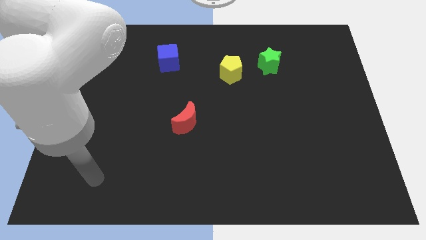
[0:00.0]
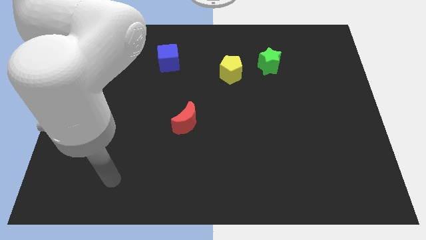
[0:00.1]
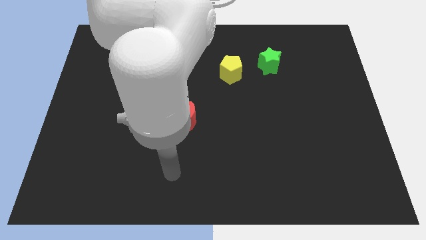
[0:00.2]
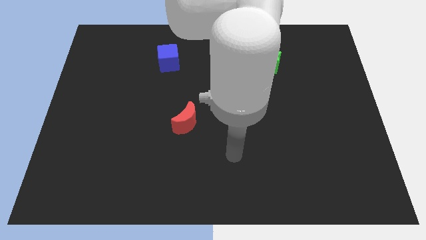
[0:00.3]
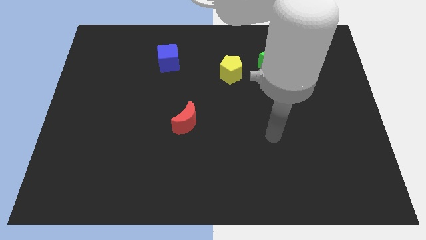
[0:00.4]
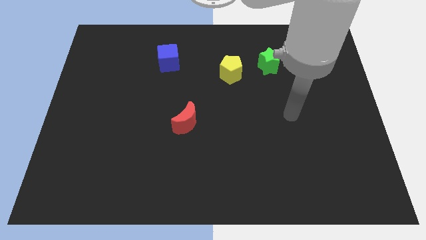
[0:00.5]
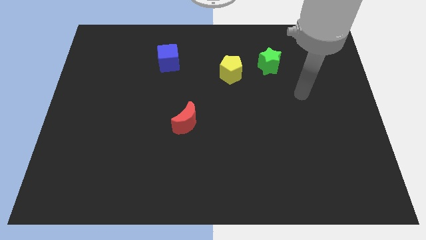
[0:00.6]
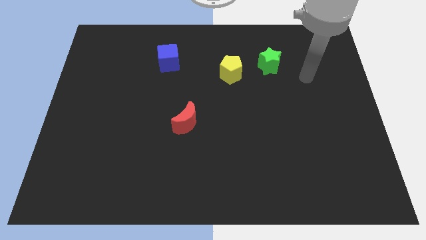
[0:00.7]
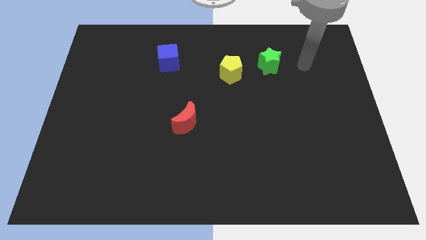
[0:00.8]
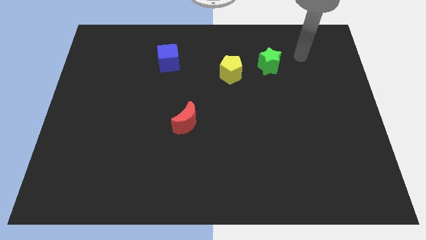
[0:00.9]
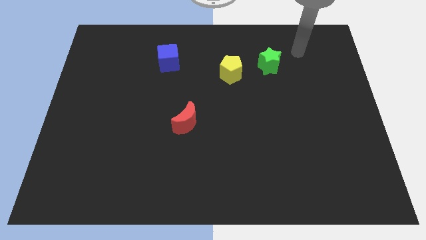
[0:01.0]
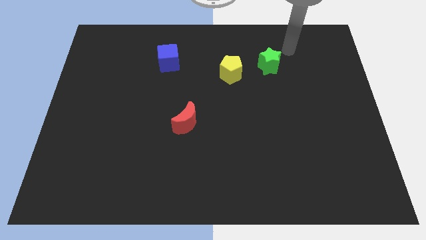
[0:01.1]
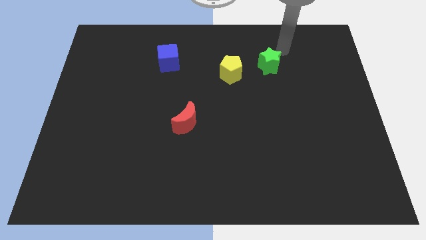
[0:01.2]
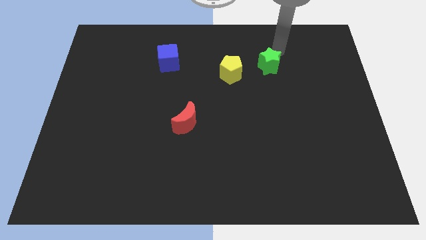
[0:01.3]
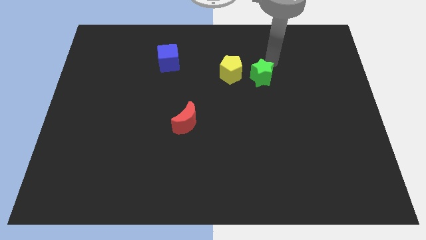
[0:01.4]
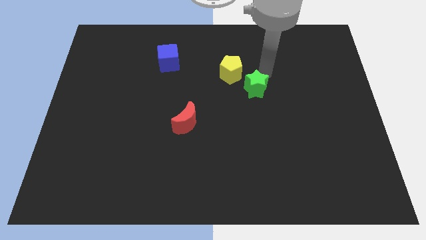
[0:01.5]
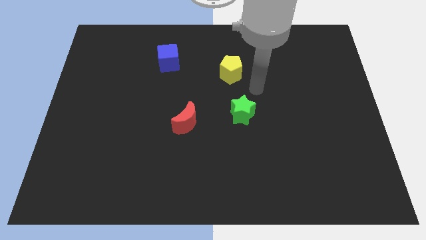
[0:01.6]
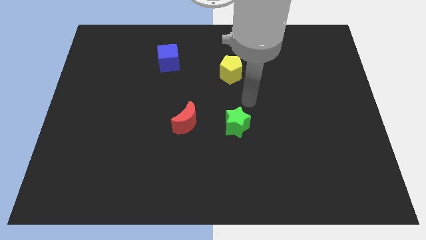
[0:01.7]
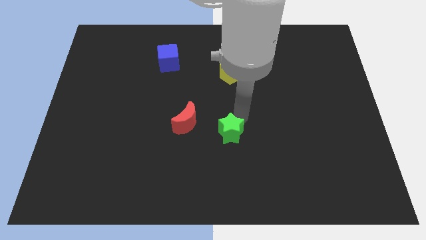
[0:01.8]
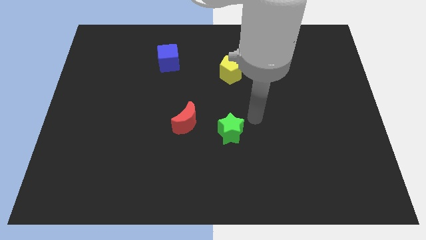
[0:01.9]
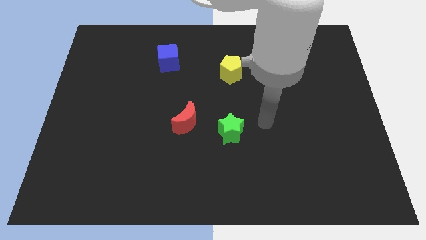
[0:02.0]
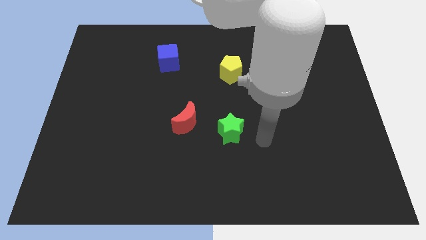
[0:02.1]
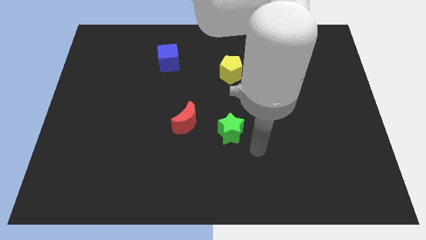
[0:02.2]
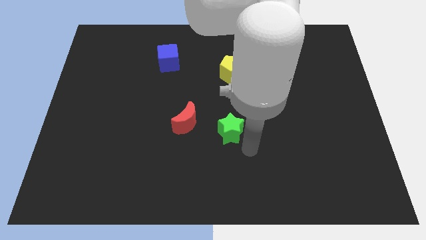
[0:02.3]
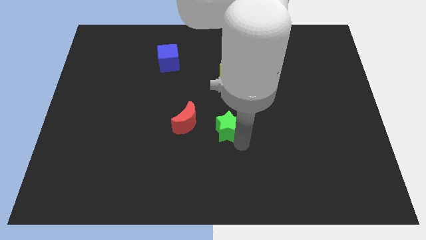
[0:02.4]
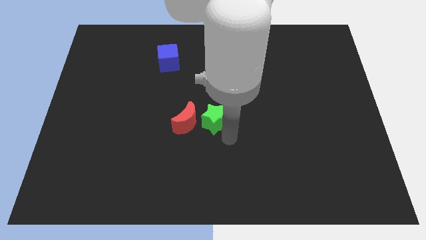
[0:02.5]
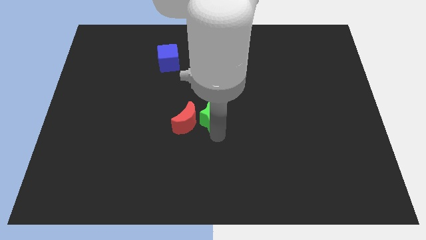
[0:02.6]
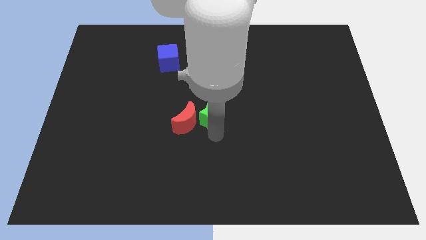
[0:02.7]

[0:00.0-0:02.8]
put the star towards the moon

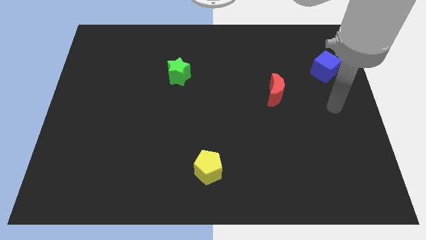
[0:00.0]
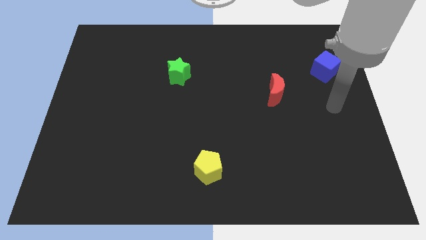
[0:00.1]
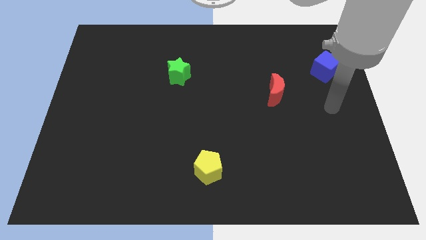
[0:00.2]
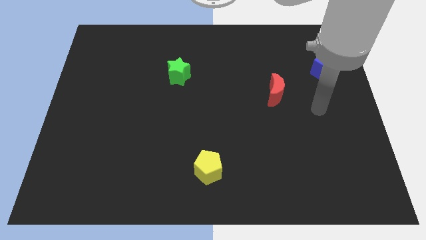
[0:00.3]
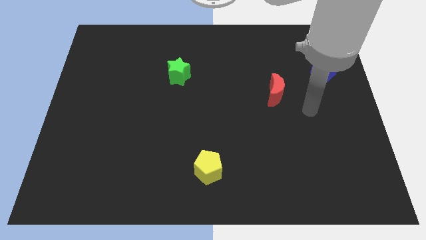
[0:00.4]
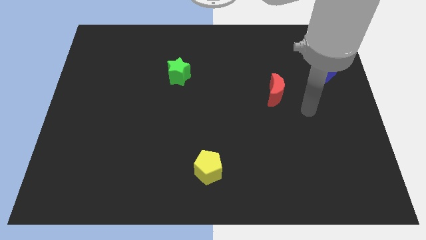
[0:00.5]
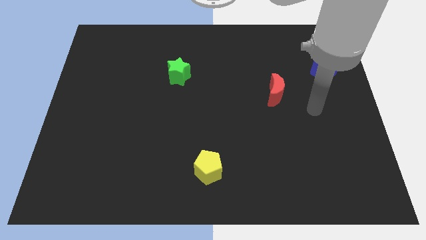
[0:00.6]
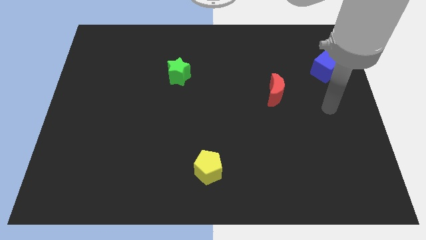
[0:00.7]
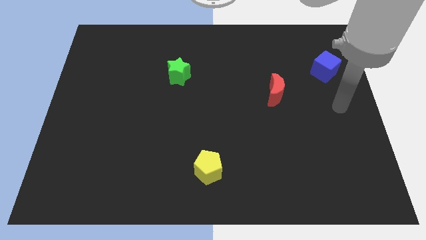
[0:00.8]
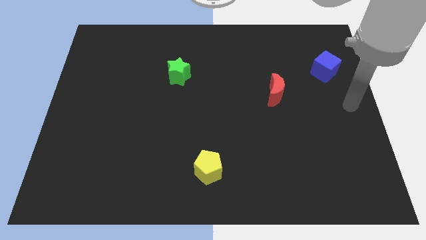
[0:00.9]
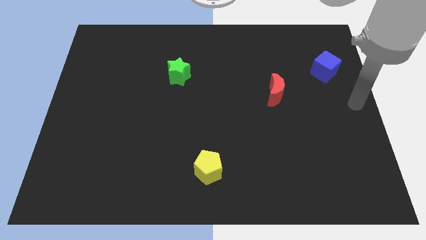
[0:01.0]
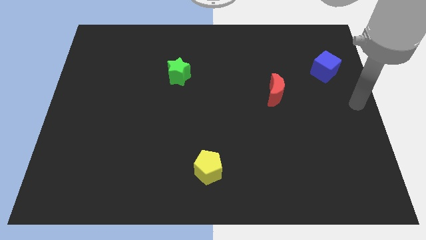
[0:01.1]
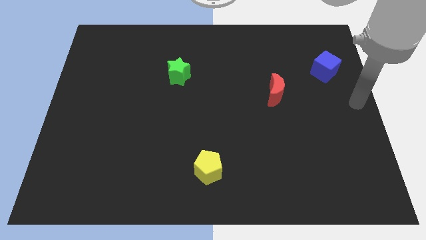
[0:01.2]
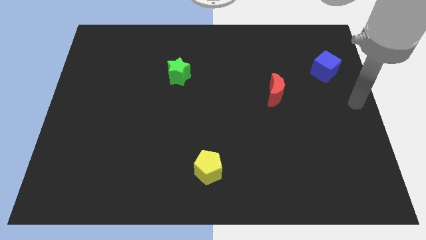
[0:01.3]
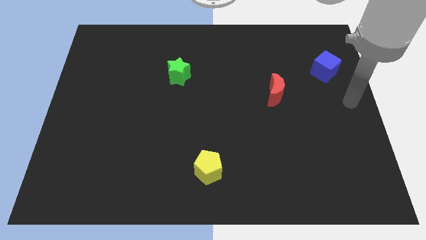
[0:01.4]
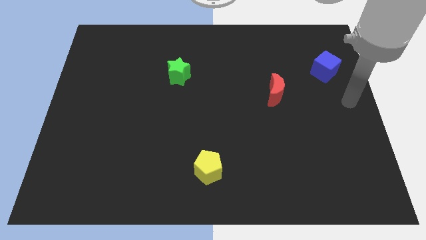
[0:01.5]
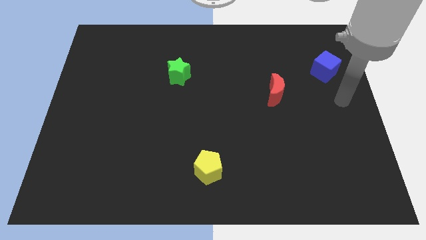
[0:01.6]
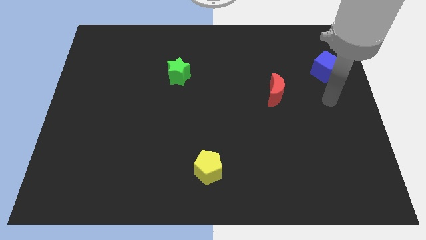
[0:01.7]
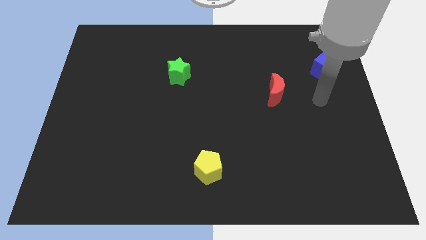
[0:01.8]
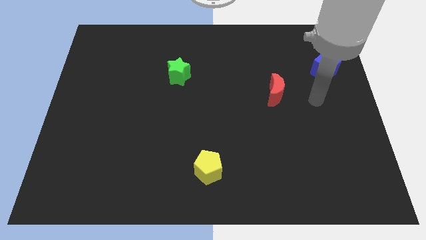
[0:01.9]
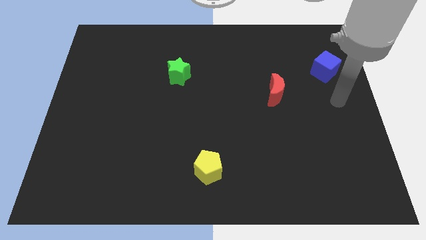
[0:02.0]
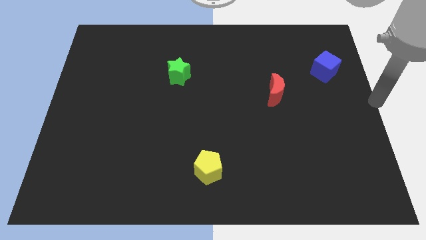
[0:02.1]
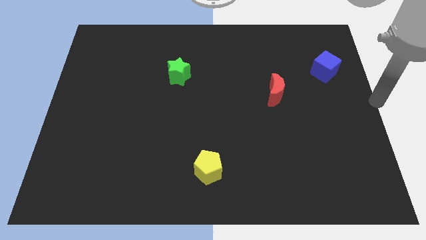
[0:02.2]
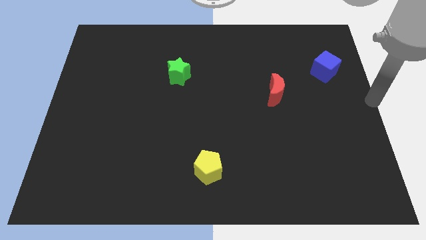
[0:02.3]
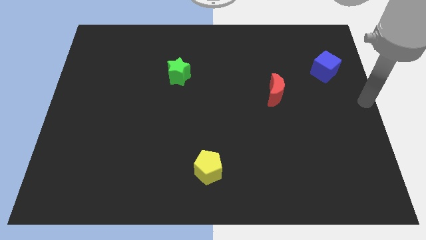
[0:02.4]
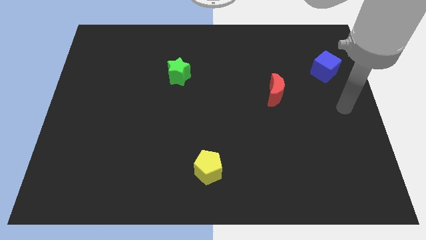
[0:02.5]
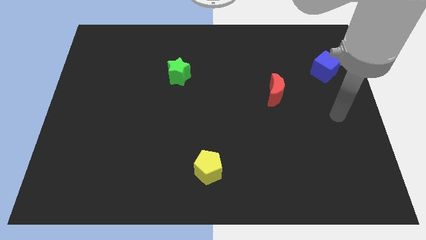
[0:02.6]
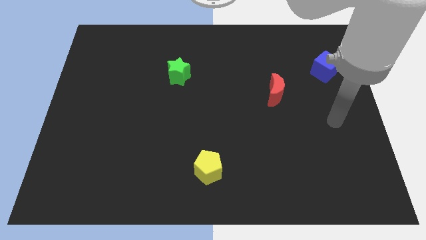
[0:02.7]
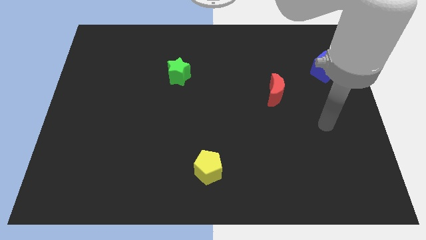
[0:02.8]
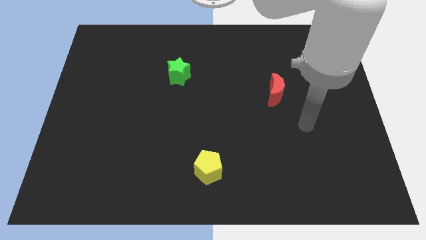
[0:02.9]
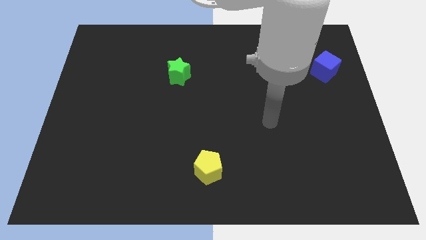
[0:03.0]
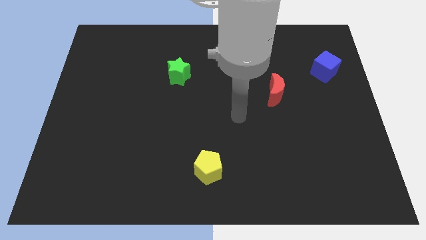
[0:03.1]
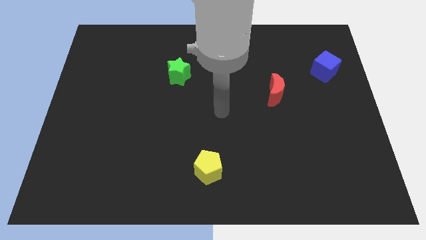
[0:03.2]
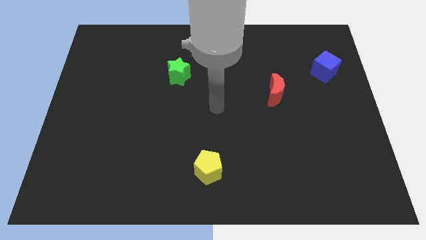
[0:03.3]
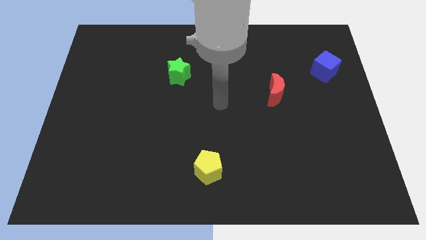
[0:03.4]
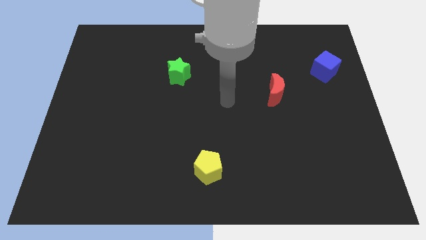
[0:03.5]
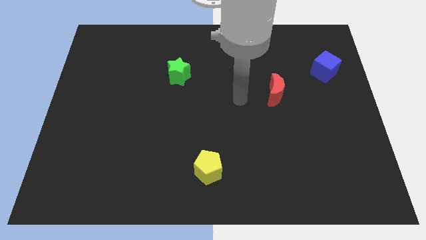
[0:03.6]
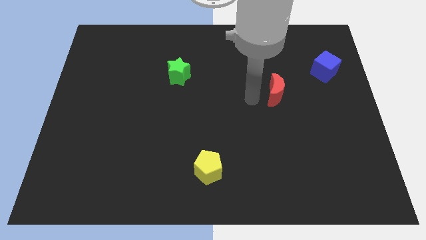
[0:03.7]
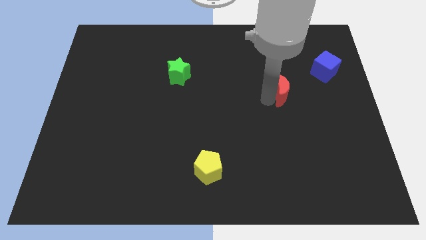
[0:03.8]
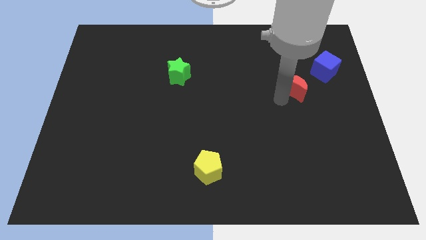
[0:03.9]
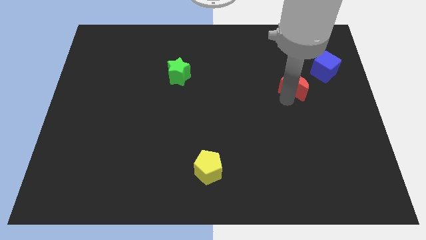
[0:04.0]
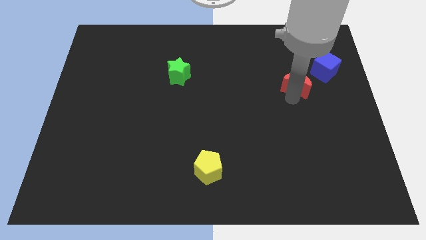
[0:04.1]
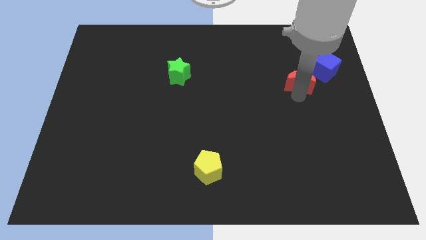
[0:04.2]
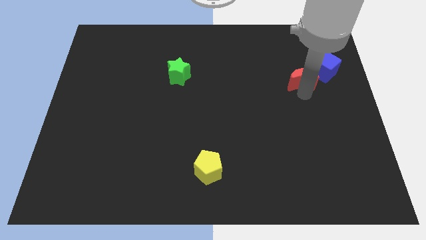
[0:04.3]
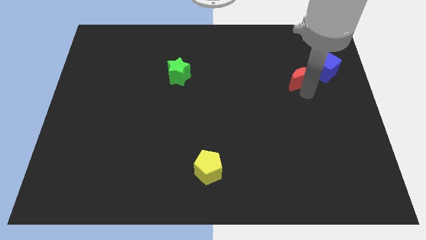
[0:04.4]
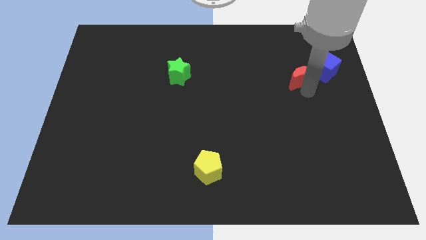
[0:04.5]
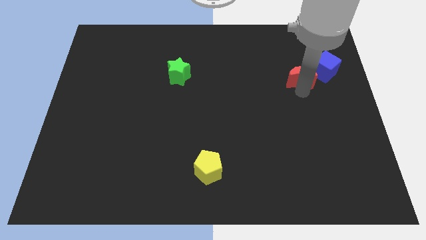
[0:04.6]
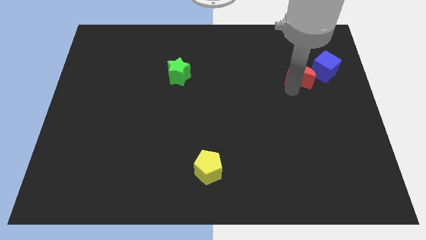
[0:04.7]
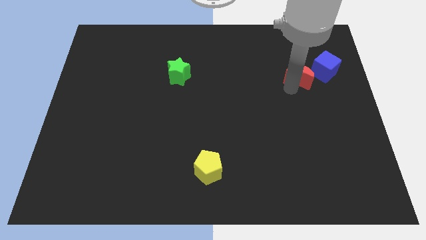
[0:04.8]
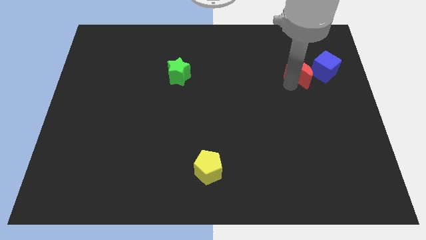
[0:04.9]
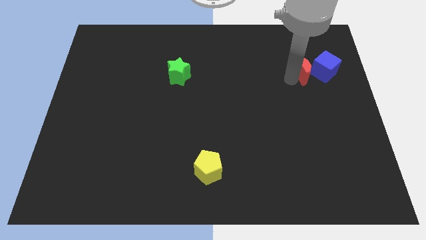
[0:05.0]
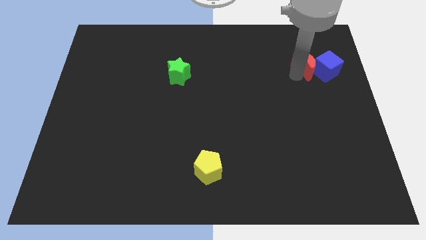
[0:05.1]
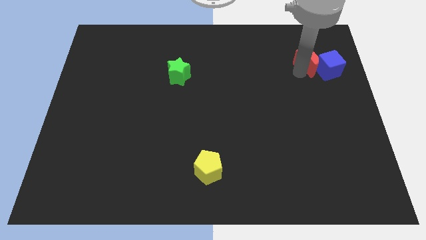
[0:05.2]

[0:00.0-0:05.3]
move the red block towards the blue cube

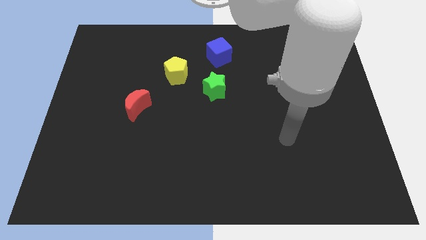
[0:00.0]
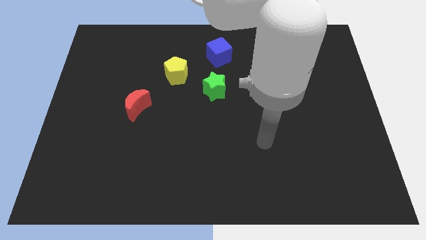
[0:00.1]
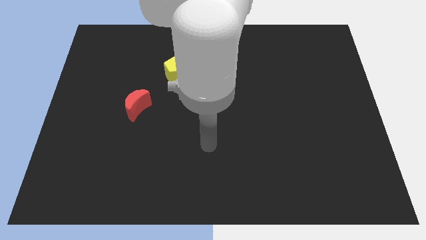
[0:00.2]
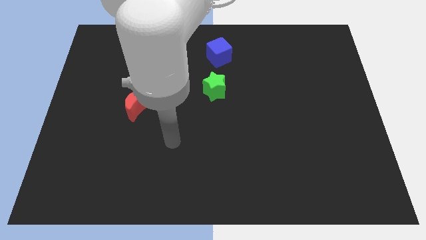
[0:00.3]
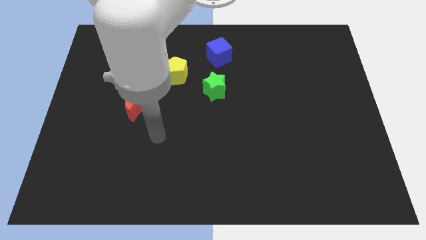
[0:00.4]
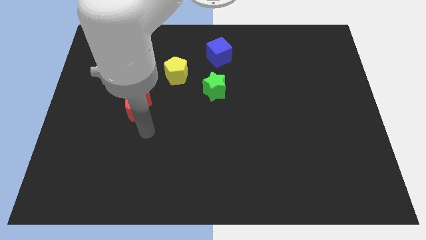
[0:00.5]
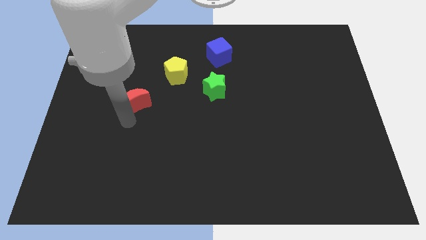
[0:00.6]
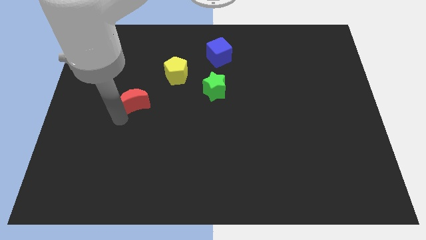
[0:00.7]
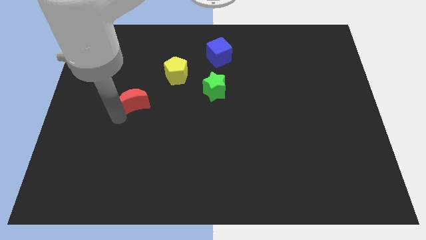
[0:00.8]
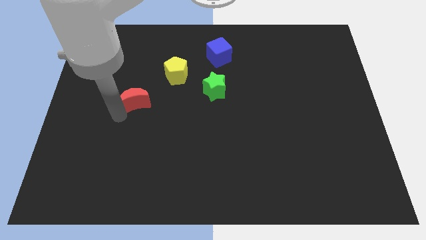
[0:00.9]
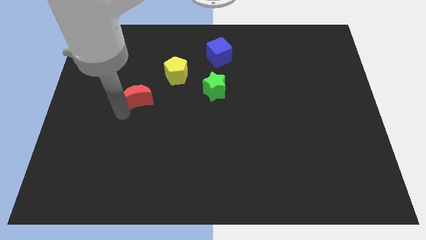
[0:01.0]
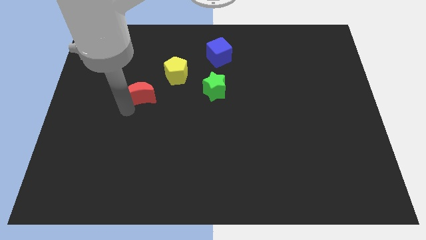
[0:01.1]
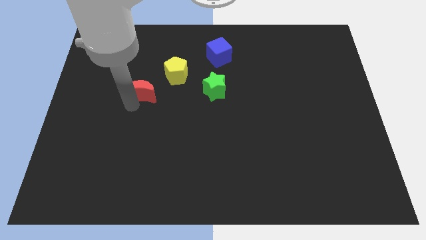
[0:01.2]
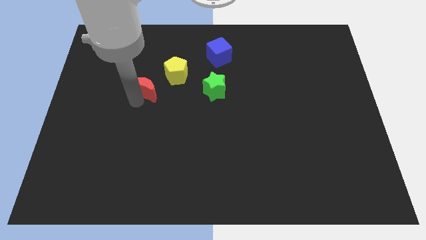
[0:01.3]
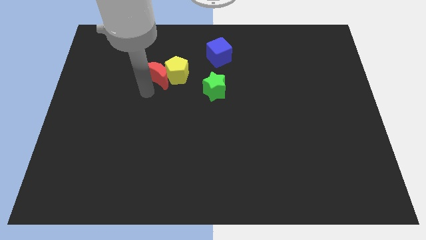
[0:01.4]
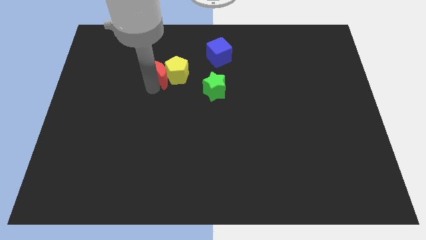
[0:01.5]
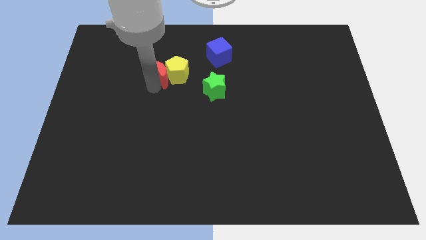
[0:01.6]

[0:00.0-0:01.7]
put the moon next to the yellow pentagon
